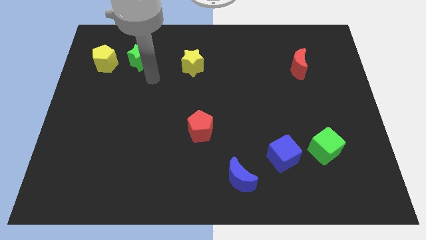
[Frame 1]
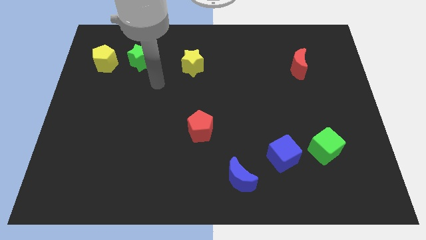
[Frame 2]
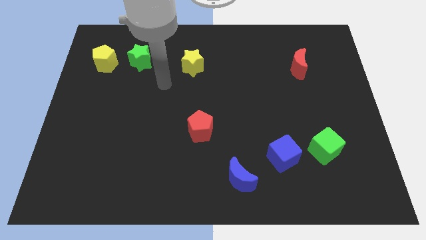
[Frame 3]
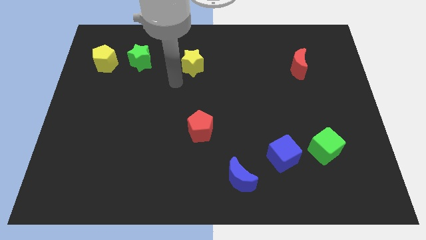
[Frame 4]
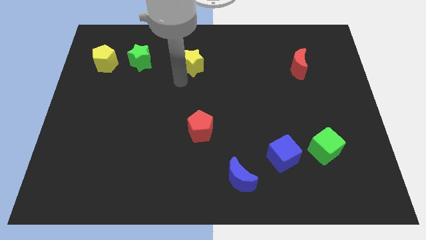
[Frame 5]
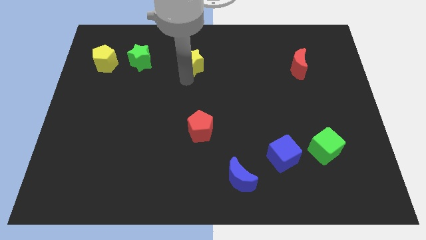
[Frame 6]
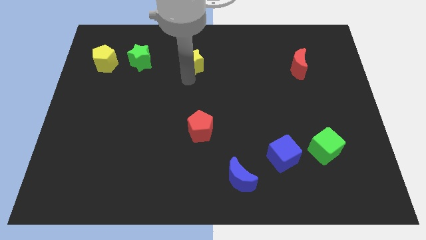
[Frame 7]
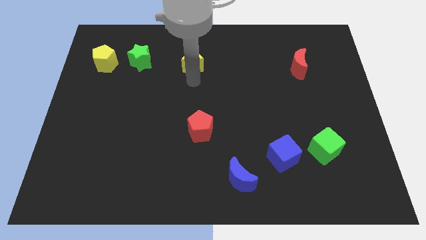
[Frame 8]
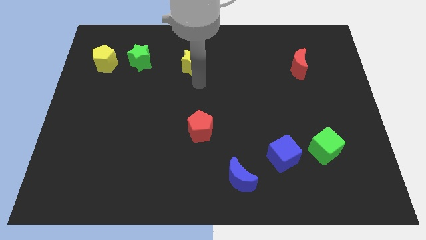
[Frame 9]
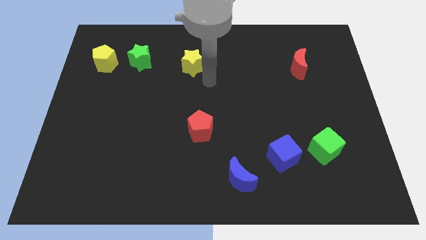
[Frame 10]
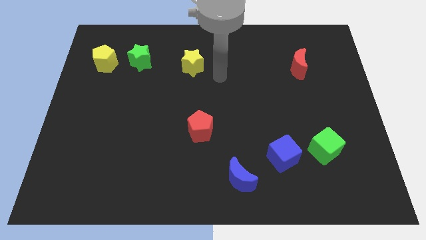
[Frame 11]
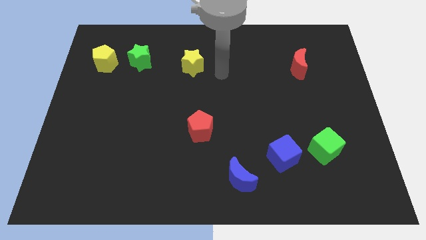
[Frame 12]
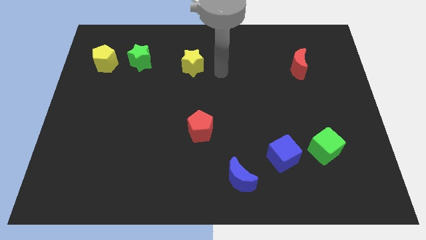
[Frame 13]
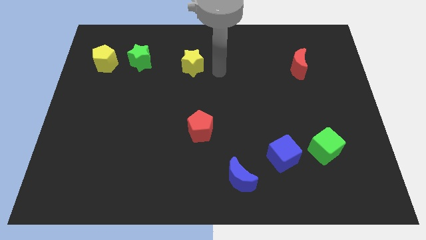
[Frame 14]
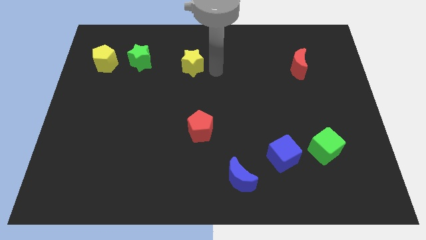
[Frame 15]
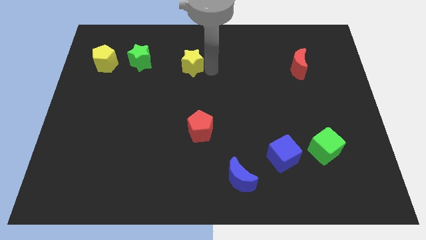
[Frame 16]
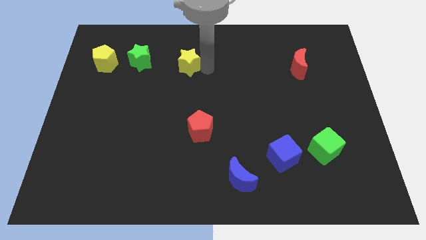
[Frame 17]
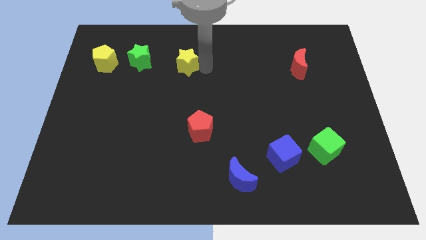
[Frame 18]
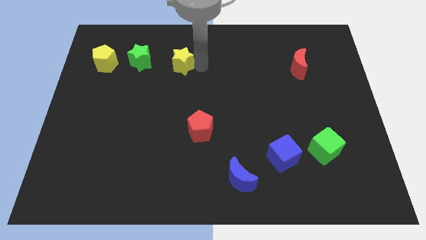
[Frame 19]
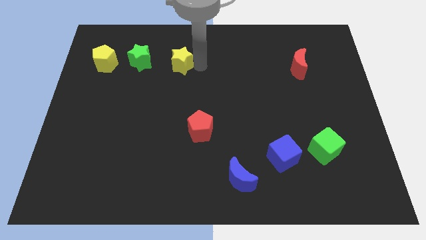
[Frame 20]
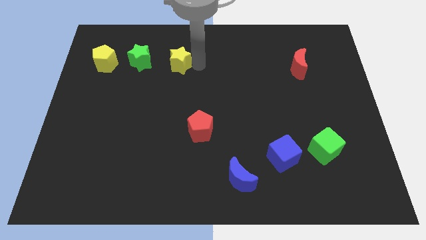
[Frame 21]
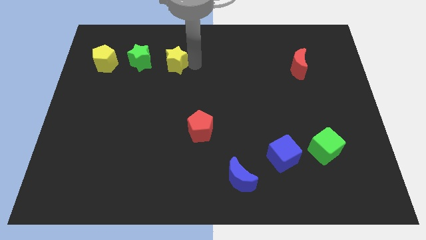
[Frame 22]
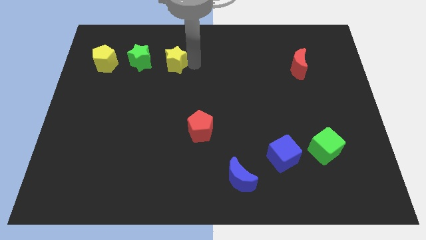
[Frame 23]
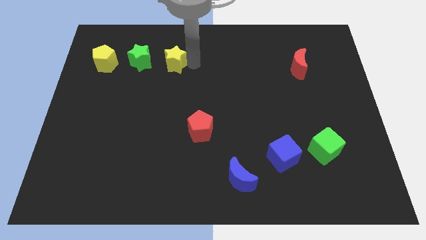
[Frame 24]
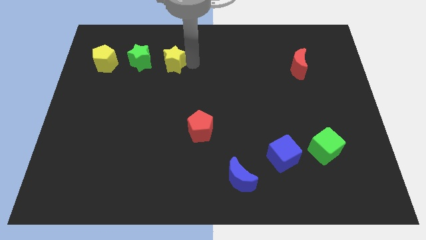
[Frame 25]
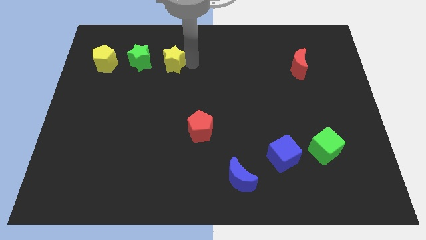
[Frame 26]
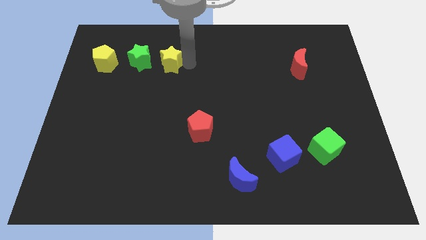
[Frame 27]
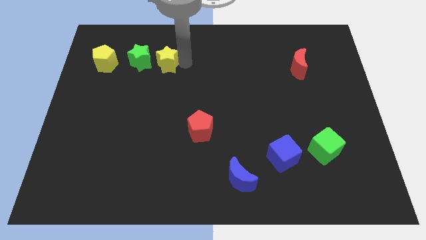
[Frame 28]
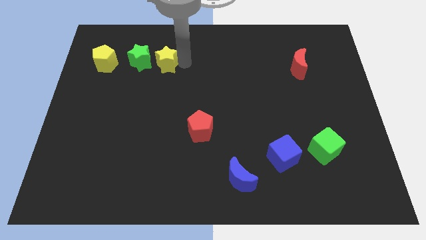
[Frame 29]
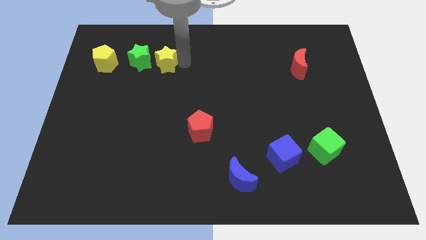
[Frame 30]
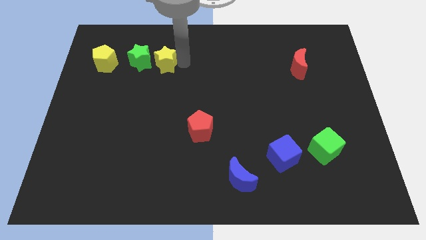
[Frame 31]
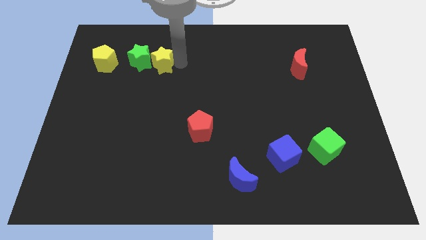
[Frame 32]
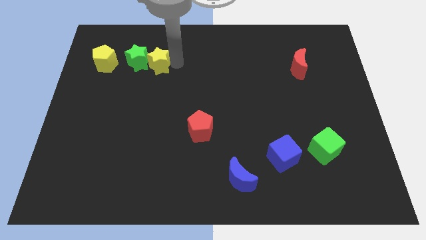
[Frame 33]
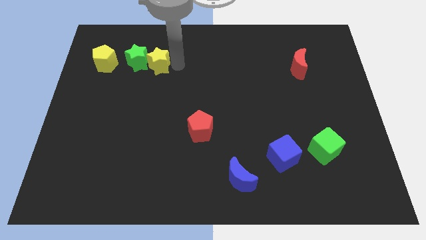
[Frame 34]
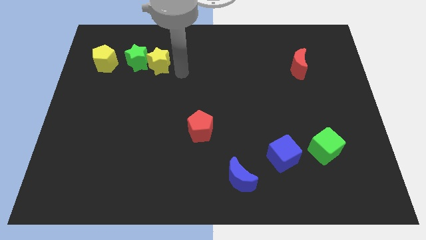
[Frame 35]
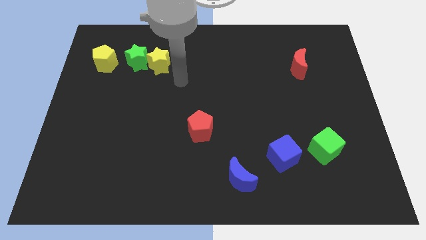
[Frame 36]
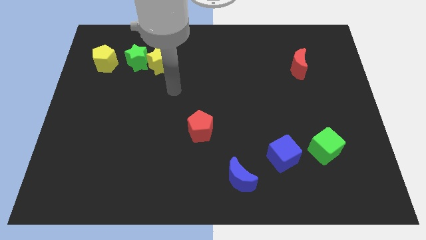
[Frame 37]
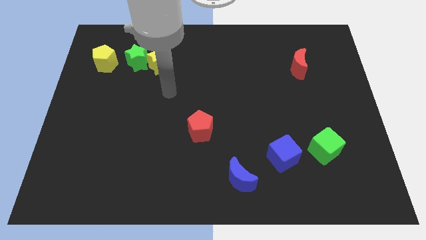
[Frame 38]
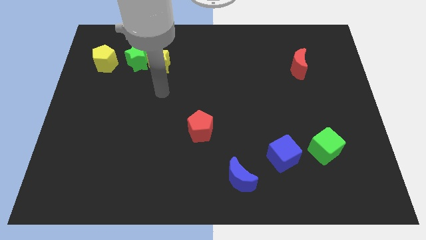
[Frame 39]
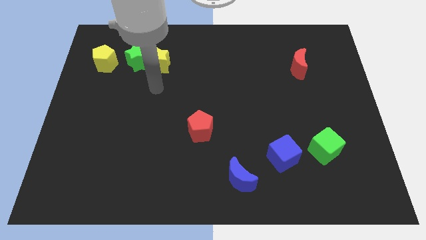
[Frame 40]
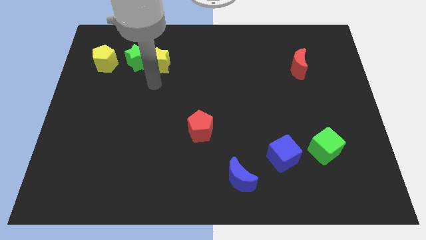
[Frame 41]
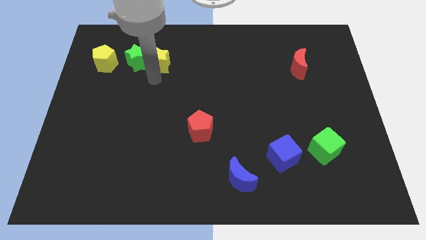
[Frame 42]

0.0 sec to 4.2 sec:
push the yellow star into green star

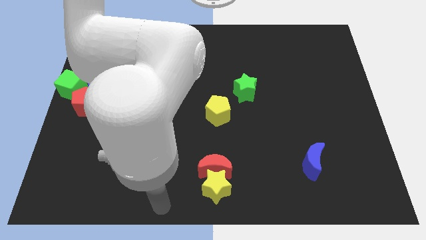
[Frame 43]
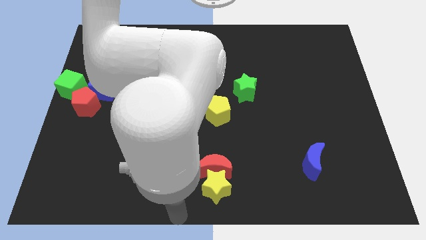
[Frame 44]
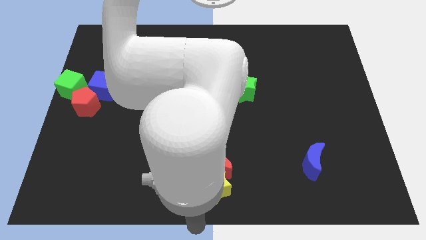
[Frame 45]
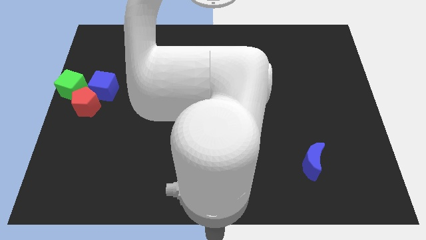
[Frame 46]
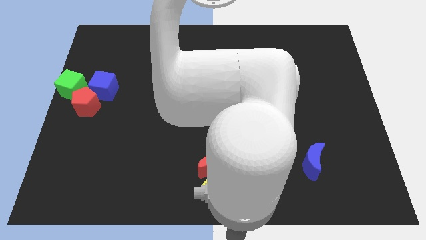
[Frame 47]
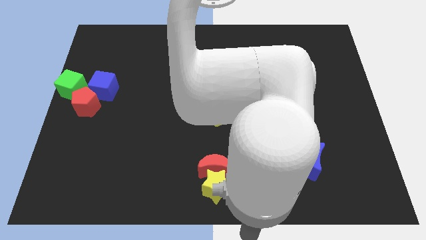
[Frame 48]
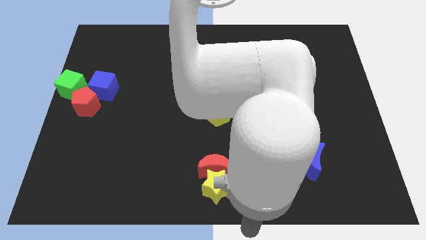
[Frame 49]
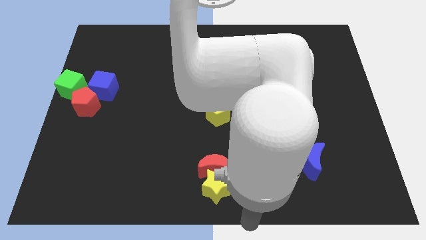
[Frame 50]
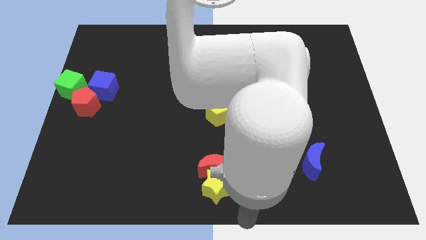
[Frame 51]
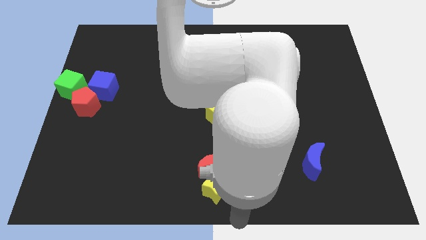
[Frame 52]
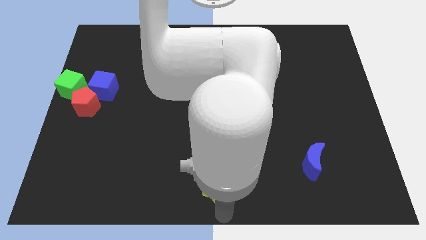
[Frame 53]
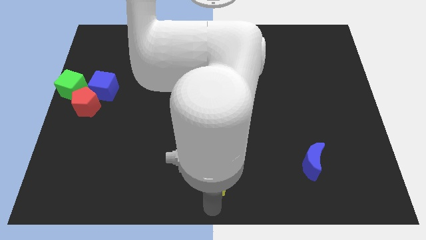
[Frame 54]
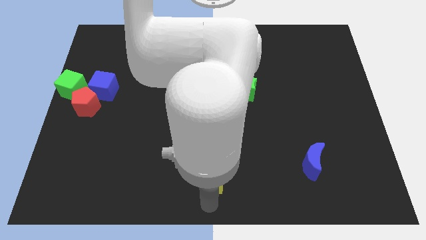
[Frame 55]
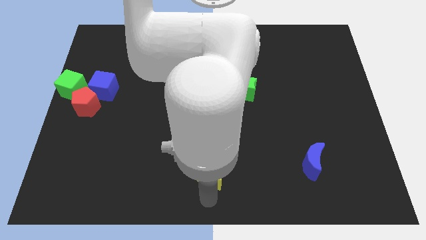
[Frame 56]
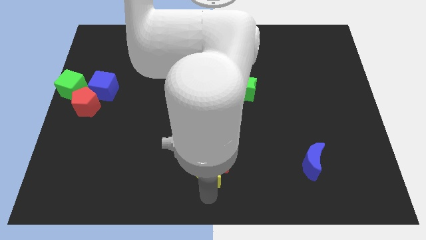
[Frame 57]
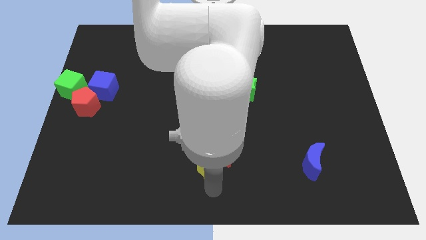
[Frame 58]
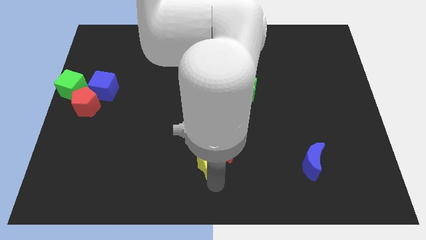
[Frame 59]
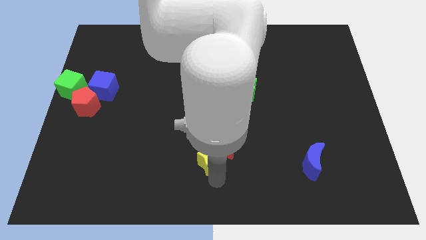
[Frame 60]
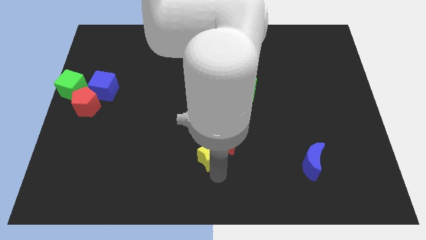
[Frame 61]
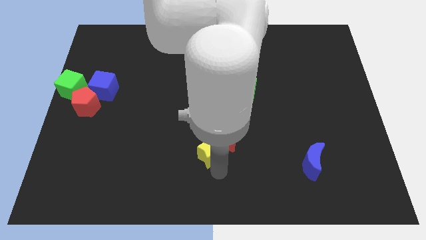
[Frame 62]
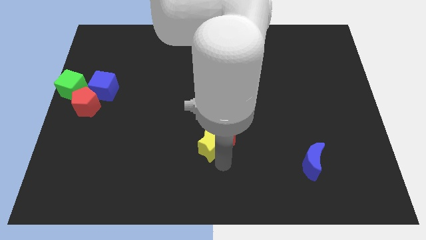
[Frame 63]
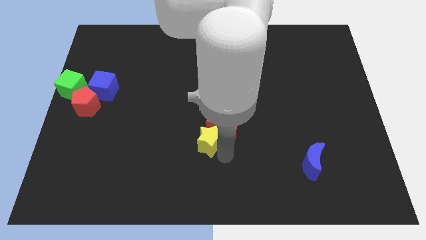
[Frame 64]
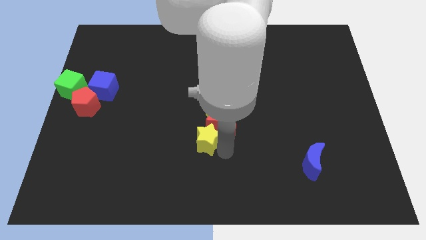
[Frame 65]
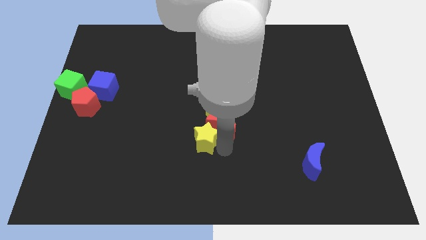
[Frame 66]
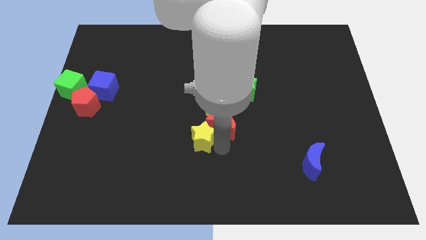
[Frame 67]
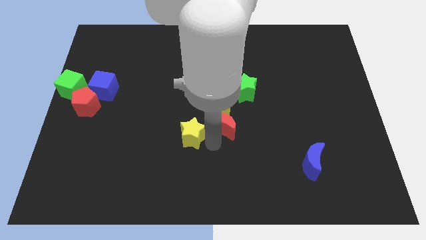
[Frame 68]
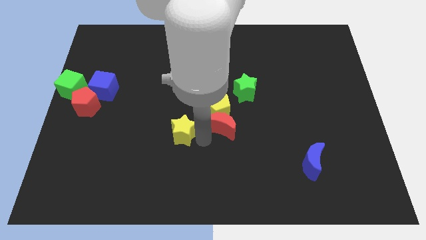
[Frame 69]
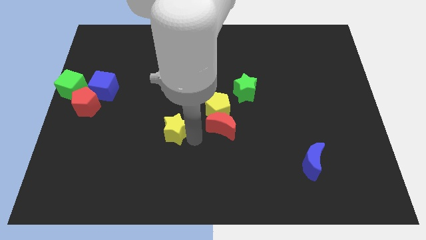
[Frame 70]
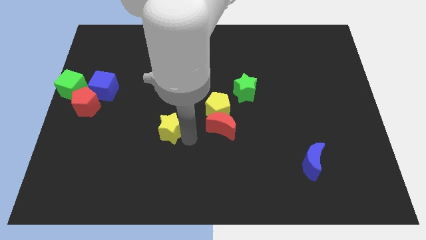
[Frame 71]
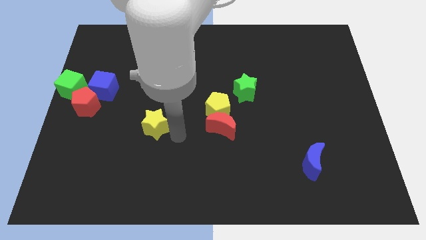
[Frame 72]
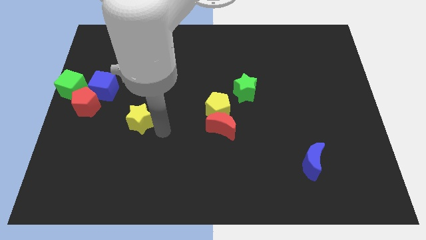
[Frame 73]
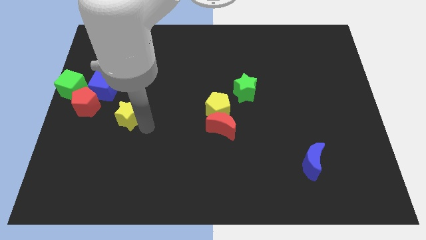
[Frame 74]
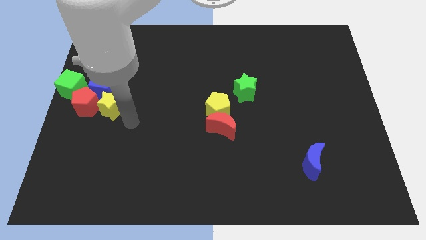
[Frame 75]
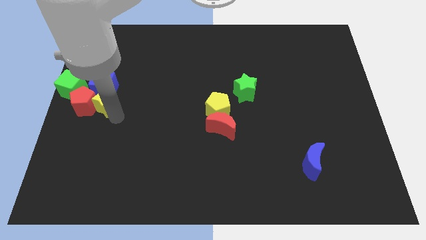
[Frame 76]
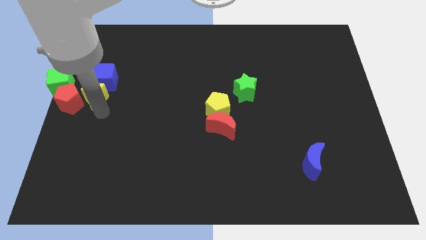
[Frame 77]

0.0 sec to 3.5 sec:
push the yellow star into the red pentagon

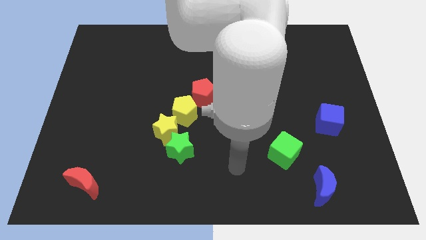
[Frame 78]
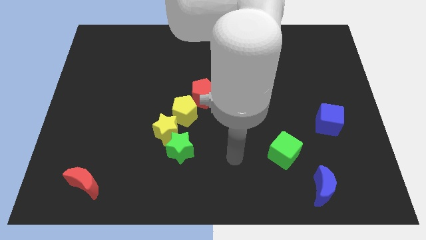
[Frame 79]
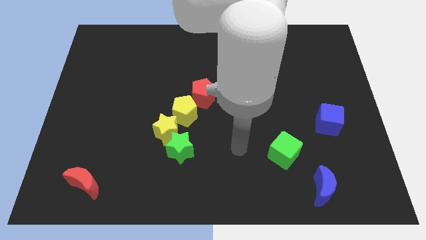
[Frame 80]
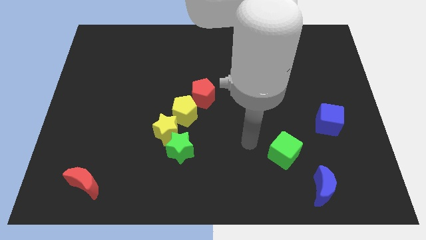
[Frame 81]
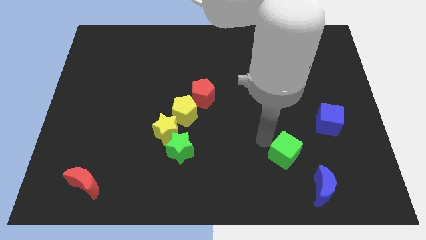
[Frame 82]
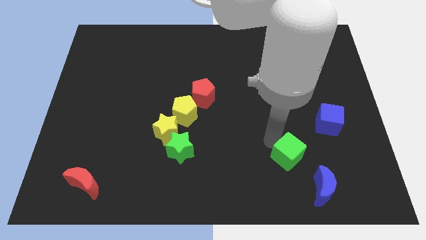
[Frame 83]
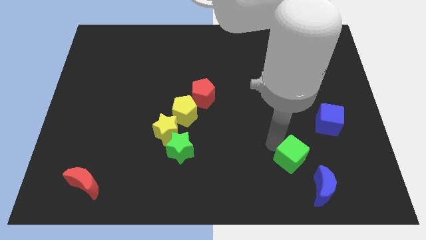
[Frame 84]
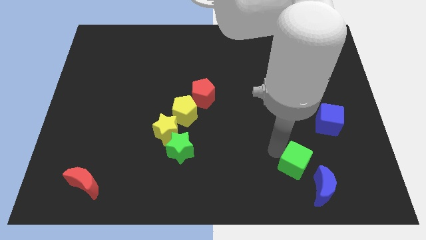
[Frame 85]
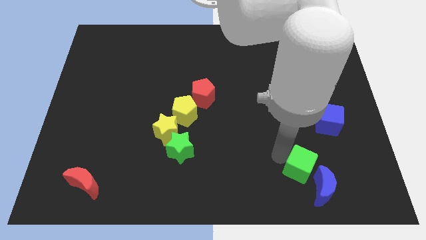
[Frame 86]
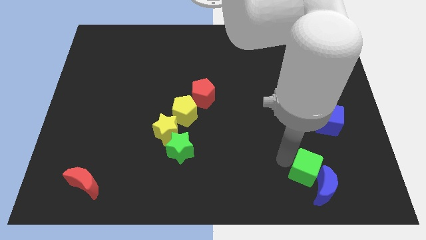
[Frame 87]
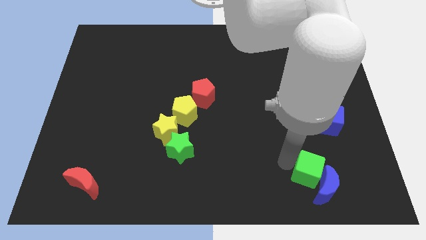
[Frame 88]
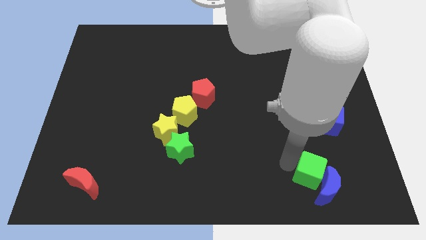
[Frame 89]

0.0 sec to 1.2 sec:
push the green cube into the blue crescent

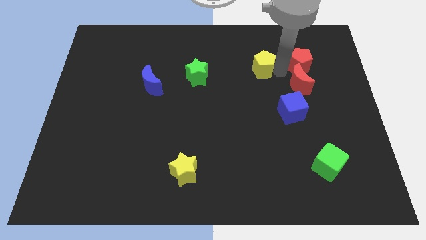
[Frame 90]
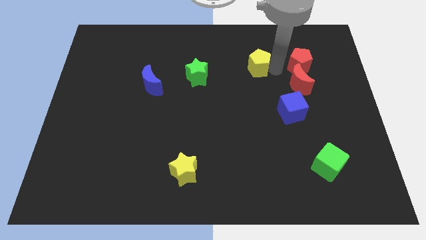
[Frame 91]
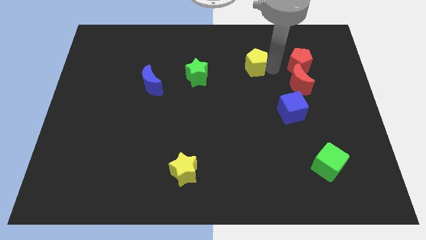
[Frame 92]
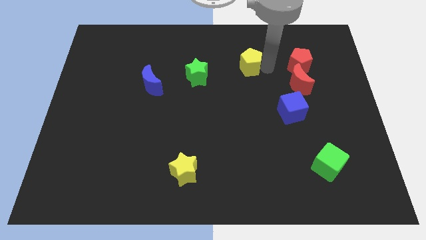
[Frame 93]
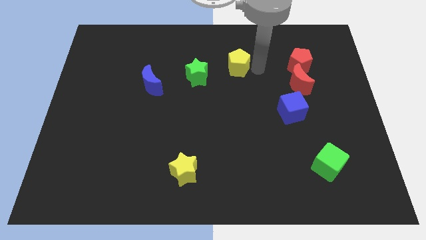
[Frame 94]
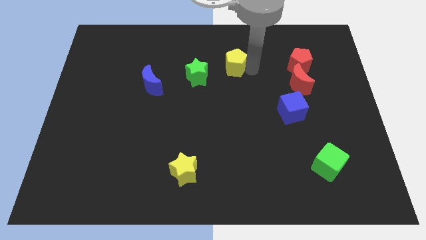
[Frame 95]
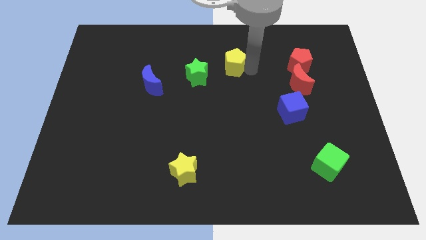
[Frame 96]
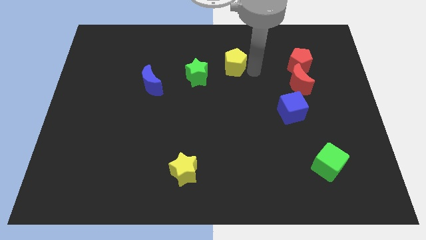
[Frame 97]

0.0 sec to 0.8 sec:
move the yellow pentagon away from red crescent
